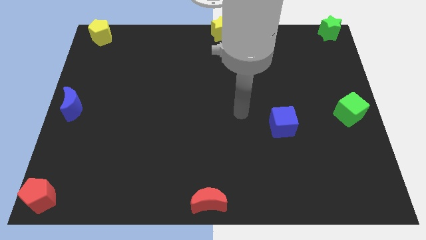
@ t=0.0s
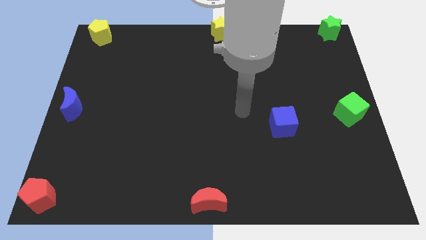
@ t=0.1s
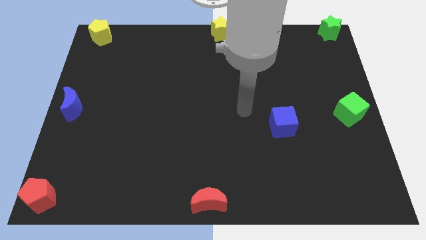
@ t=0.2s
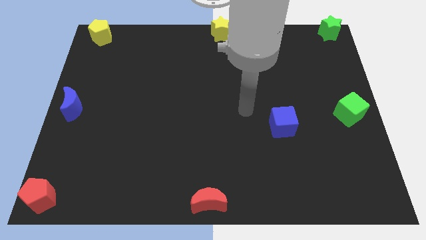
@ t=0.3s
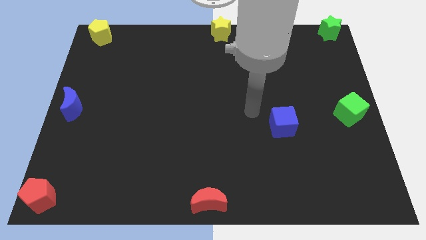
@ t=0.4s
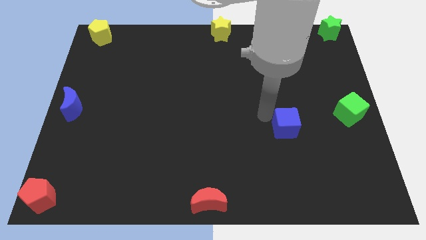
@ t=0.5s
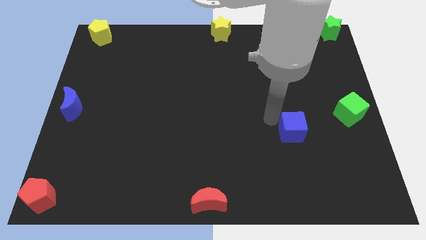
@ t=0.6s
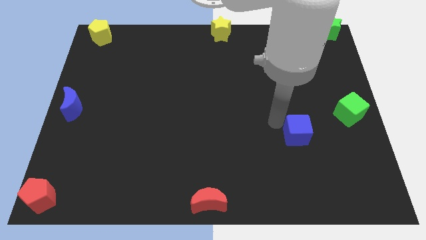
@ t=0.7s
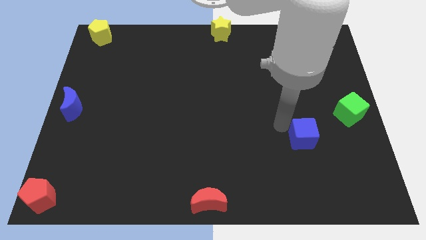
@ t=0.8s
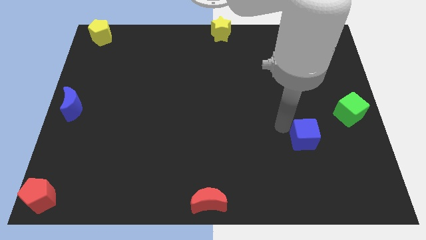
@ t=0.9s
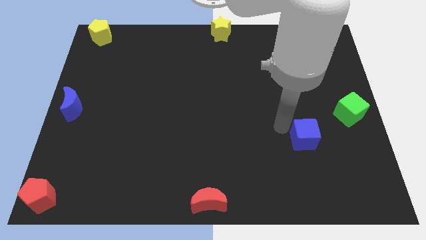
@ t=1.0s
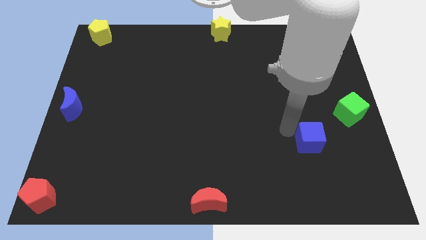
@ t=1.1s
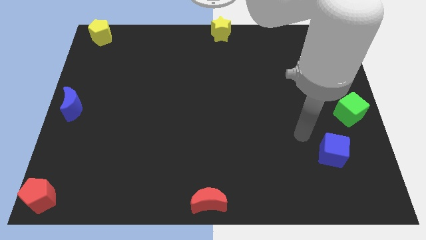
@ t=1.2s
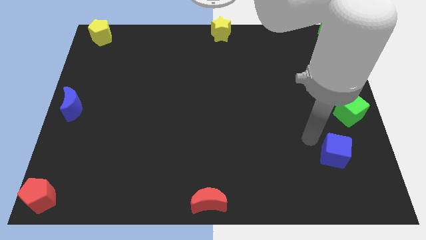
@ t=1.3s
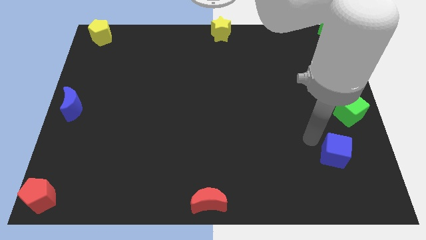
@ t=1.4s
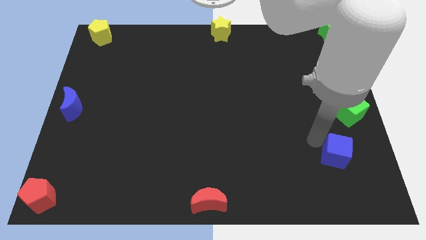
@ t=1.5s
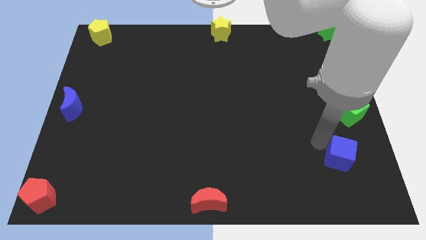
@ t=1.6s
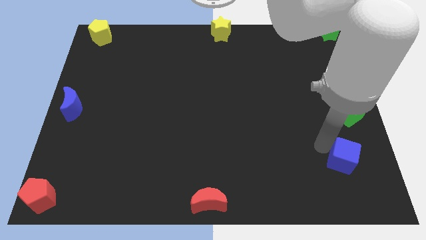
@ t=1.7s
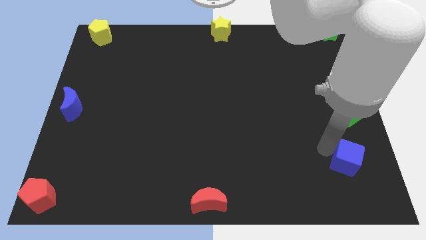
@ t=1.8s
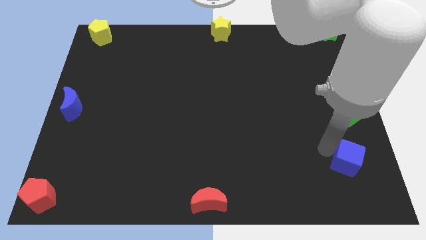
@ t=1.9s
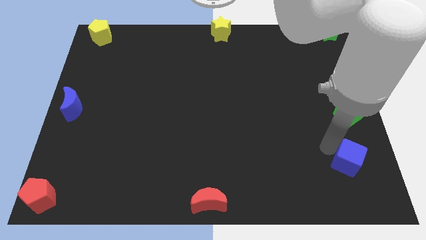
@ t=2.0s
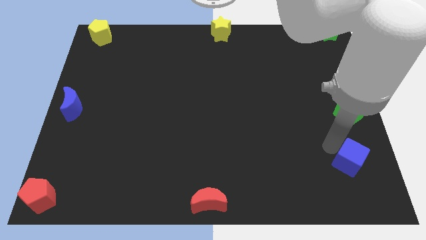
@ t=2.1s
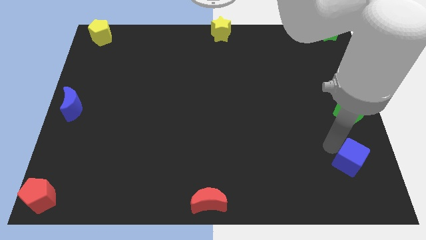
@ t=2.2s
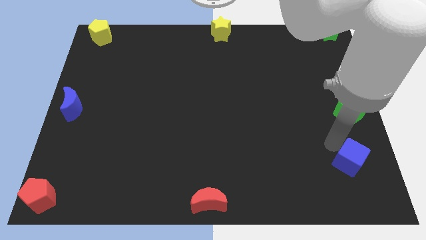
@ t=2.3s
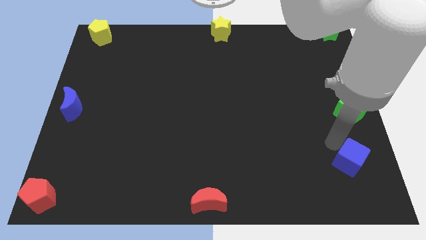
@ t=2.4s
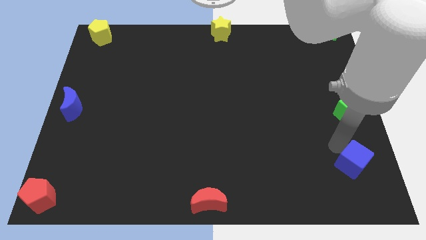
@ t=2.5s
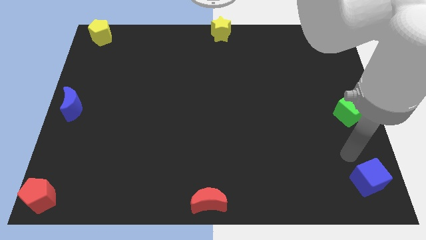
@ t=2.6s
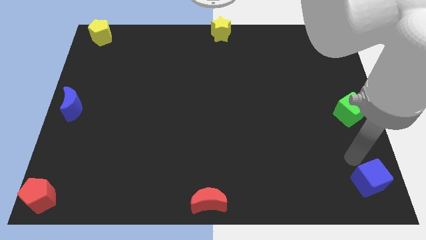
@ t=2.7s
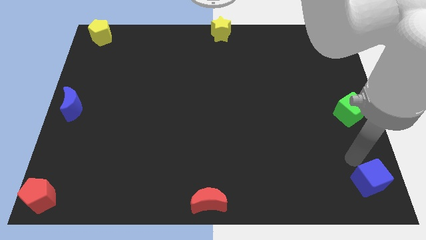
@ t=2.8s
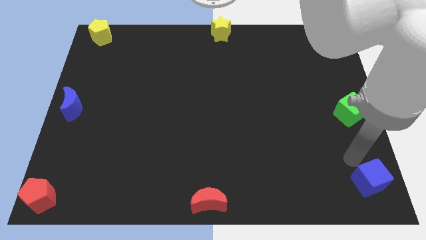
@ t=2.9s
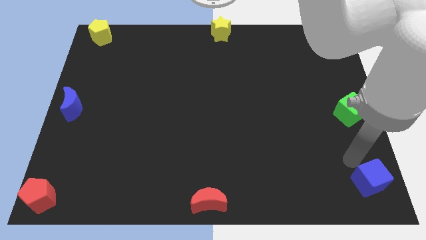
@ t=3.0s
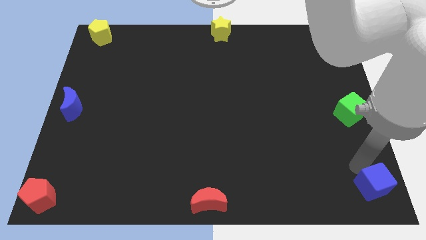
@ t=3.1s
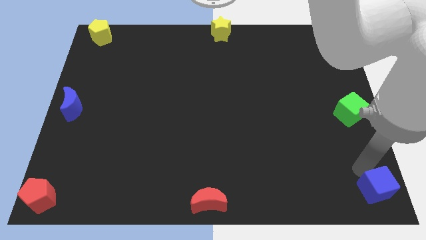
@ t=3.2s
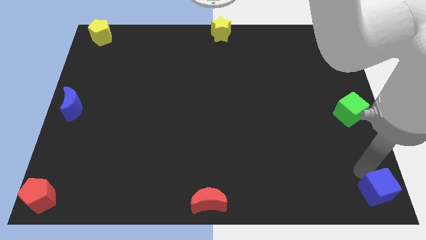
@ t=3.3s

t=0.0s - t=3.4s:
place the blue cube below the green cube to form a vertical line

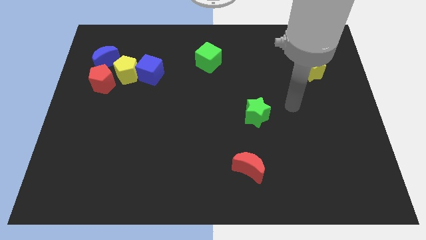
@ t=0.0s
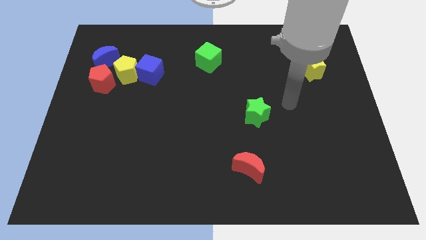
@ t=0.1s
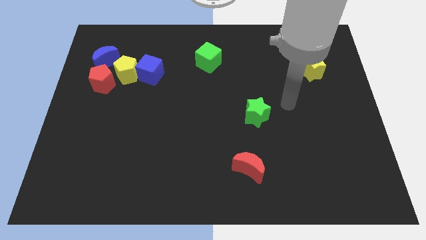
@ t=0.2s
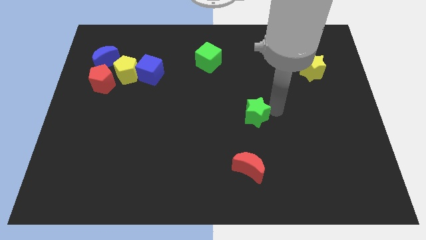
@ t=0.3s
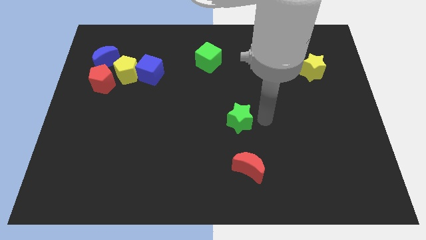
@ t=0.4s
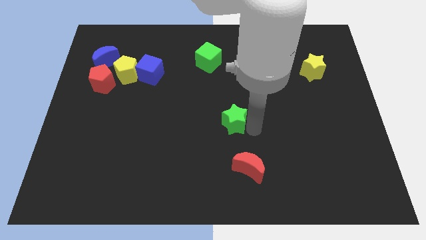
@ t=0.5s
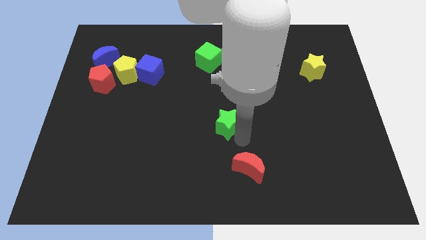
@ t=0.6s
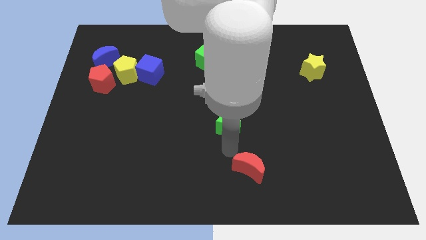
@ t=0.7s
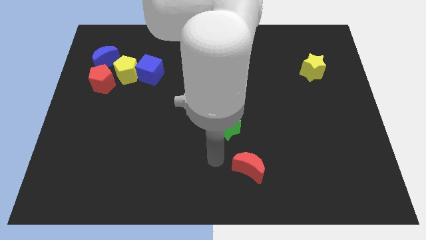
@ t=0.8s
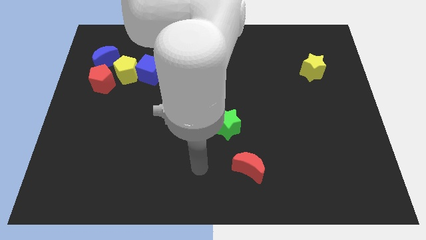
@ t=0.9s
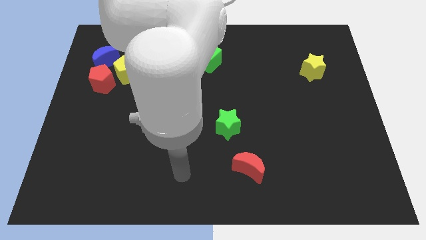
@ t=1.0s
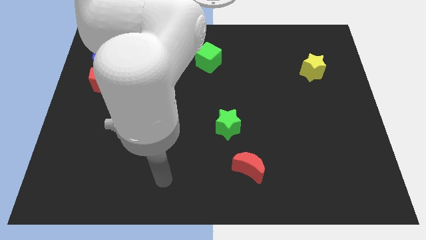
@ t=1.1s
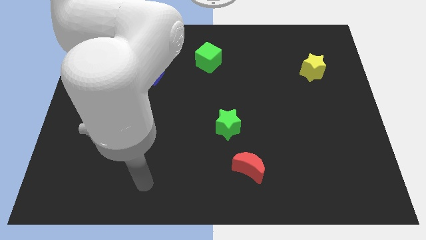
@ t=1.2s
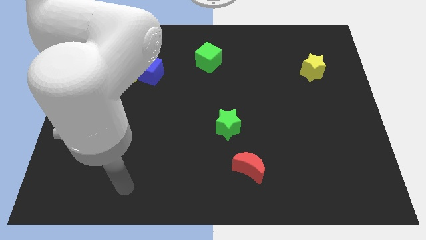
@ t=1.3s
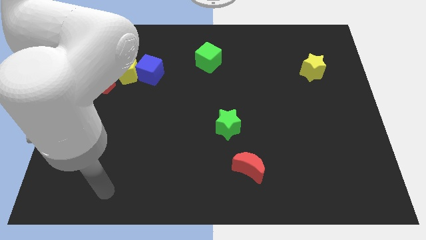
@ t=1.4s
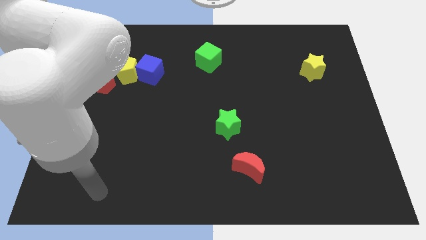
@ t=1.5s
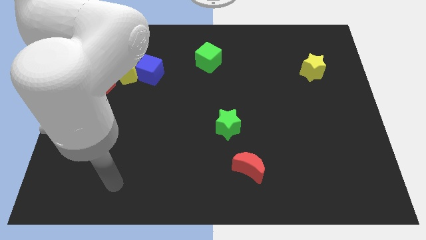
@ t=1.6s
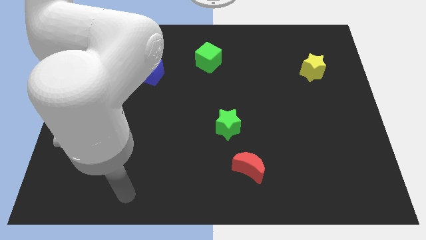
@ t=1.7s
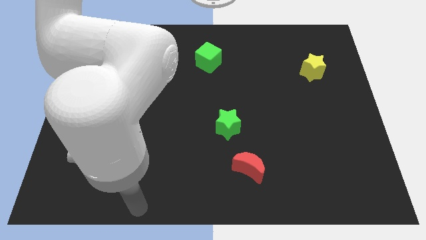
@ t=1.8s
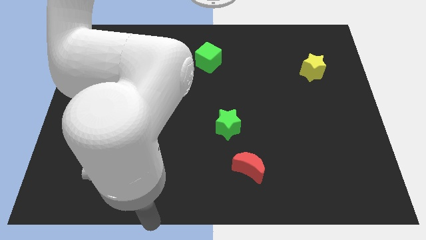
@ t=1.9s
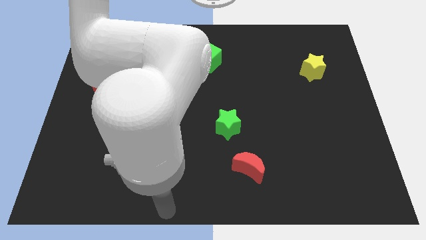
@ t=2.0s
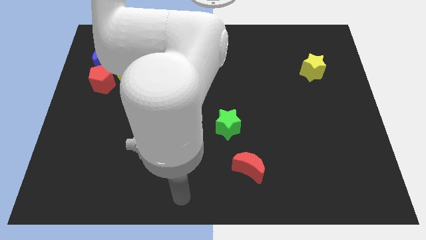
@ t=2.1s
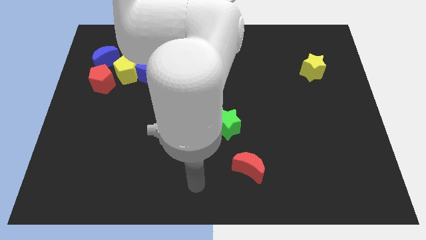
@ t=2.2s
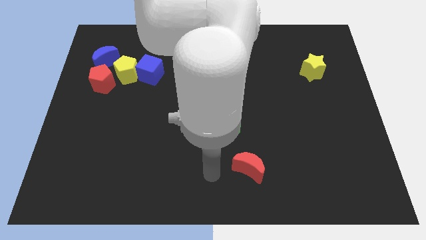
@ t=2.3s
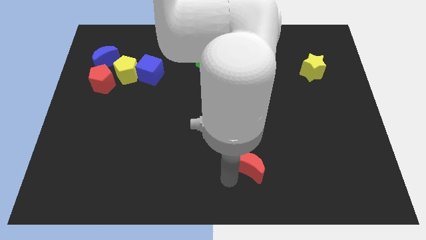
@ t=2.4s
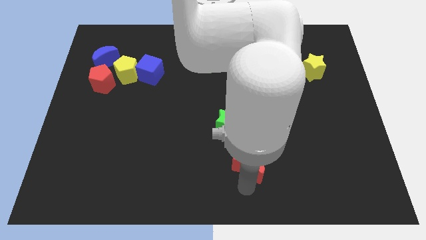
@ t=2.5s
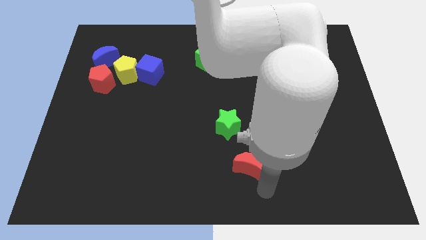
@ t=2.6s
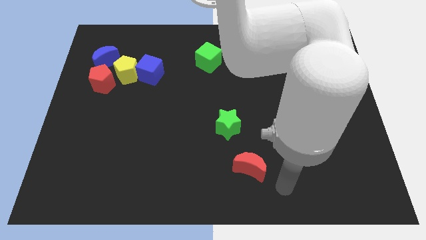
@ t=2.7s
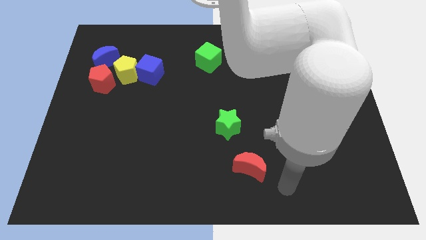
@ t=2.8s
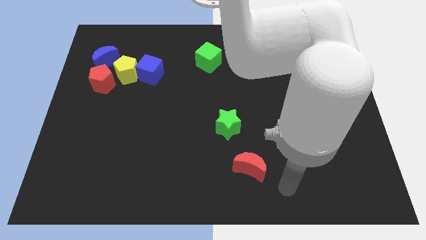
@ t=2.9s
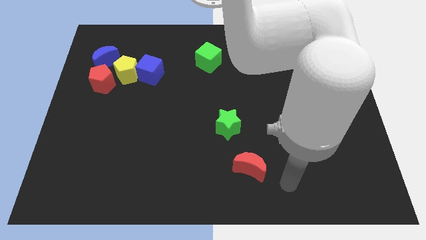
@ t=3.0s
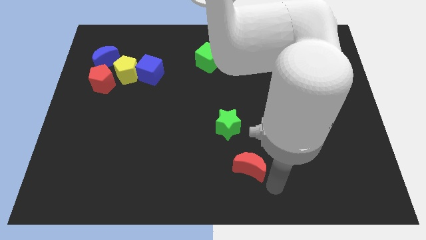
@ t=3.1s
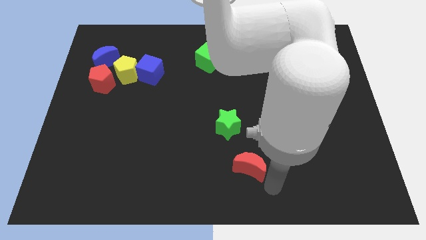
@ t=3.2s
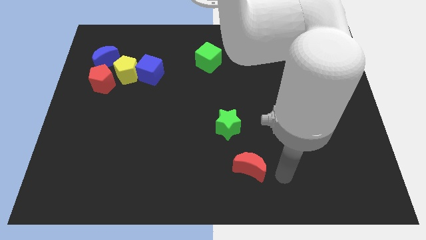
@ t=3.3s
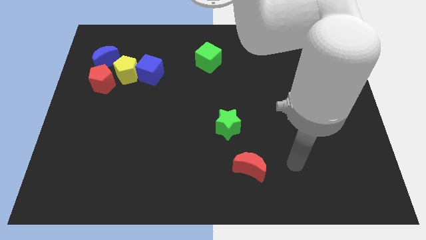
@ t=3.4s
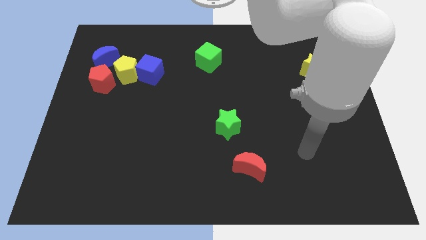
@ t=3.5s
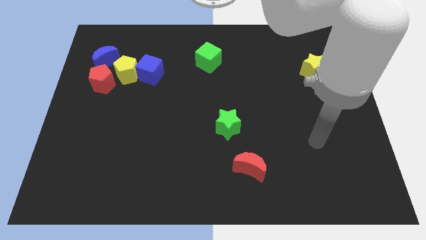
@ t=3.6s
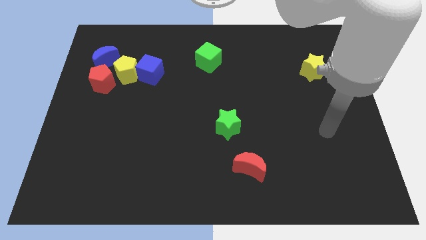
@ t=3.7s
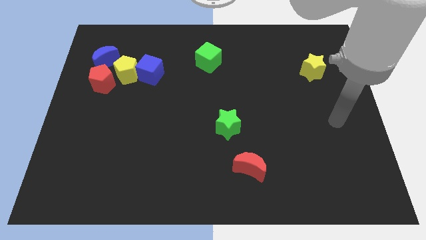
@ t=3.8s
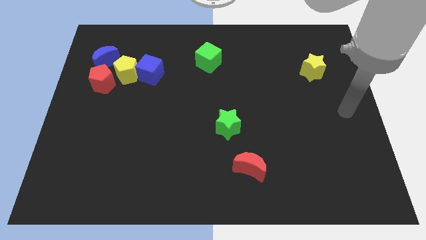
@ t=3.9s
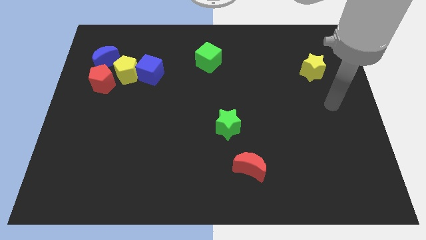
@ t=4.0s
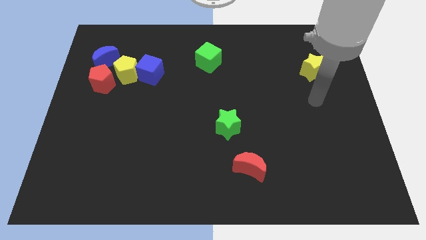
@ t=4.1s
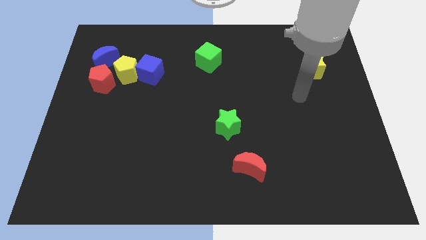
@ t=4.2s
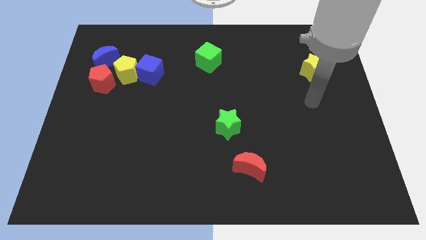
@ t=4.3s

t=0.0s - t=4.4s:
move your arm to the bottom of the yellow star

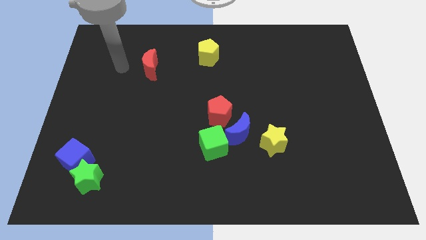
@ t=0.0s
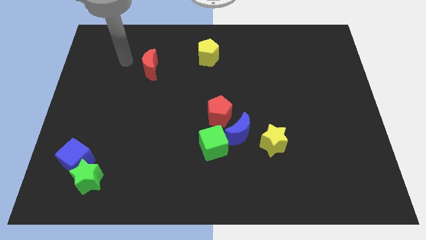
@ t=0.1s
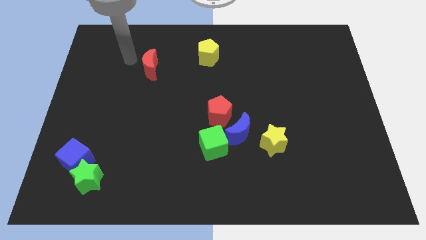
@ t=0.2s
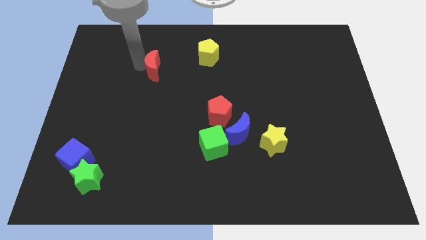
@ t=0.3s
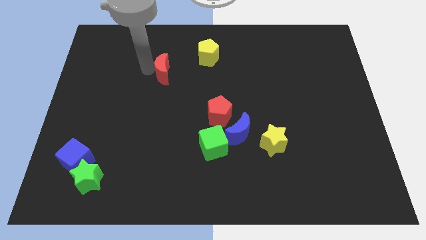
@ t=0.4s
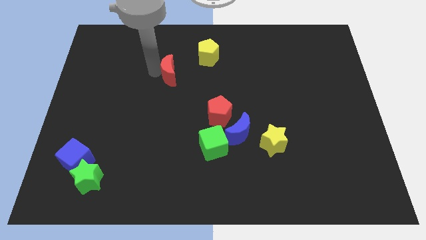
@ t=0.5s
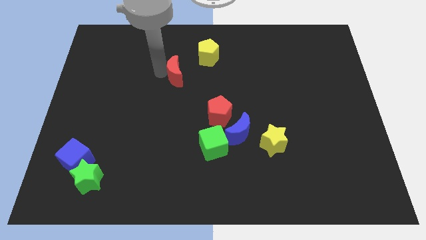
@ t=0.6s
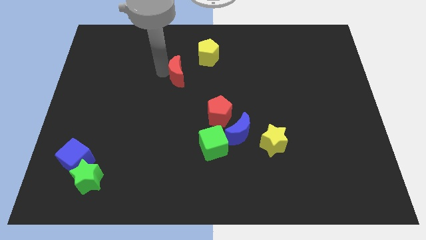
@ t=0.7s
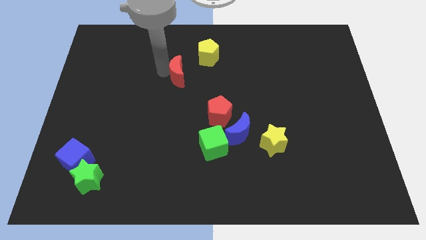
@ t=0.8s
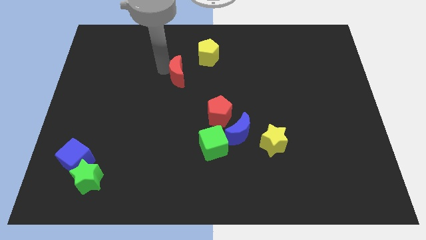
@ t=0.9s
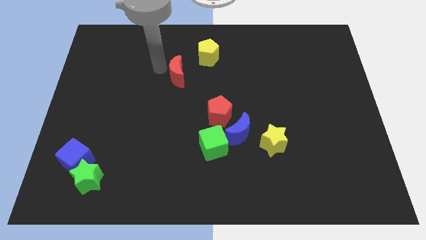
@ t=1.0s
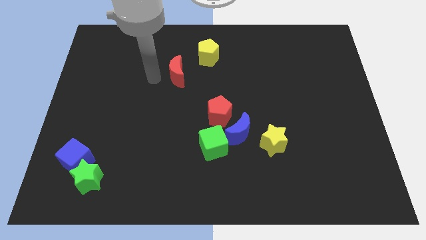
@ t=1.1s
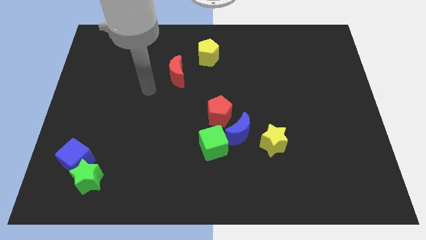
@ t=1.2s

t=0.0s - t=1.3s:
push the red crescent towards the bottom side of the yellow pentagon
